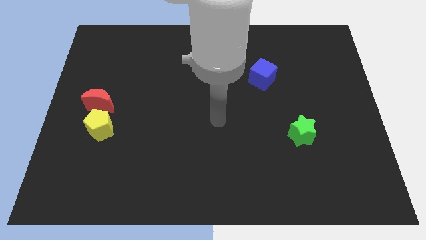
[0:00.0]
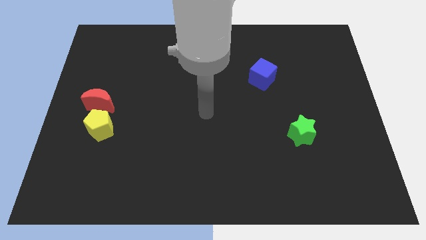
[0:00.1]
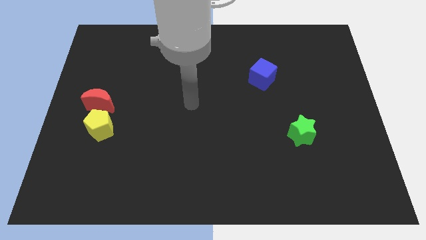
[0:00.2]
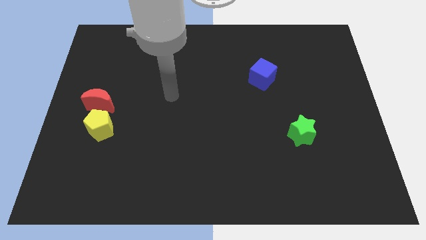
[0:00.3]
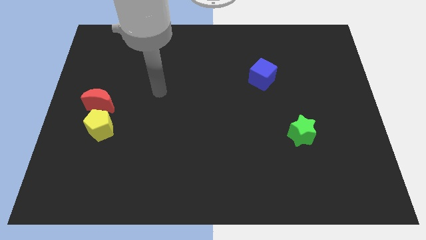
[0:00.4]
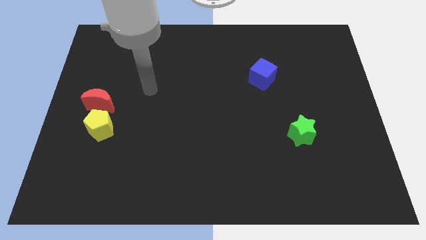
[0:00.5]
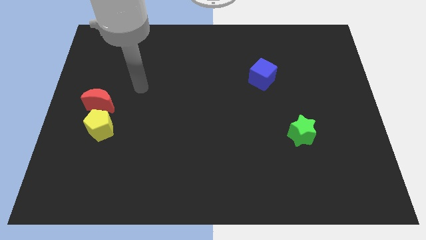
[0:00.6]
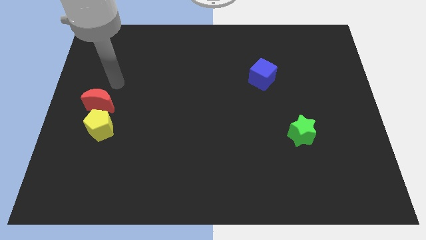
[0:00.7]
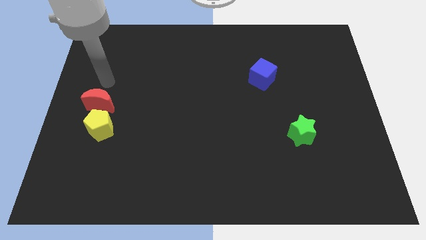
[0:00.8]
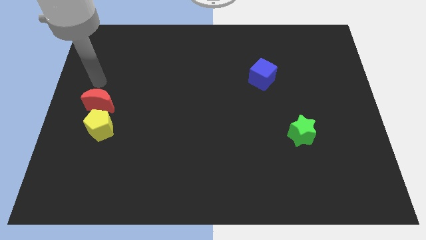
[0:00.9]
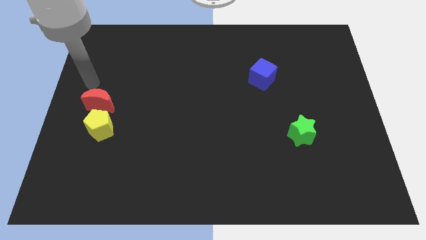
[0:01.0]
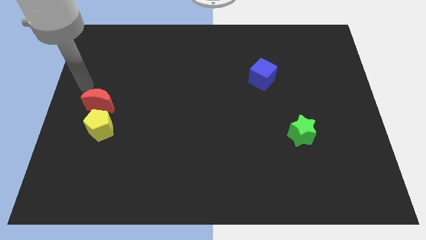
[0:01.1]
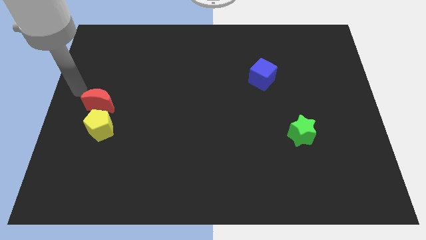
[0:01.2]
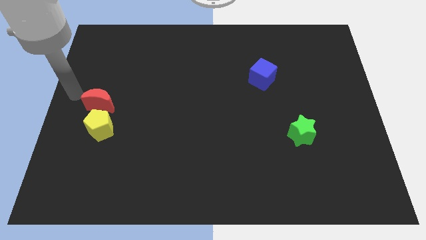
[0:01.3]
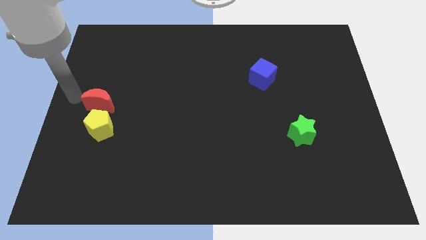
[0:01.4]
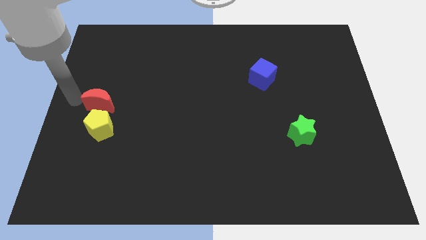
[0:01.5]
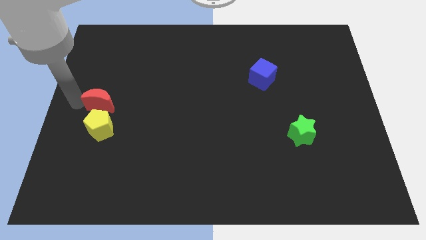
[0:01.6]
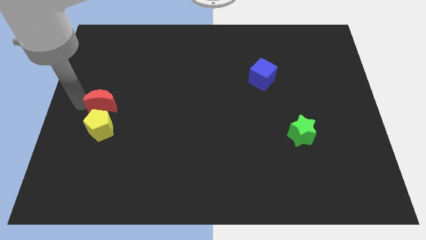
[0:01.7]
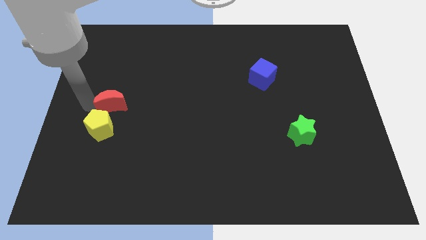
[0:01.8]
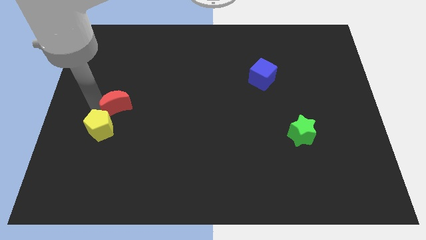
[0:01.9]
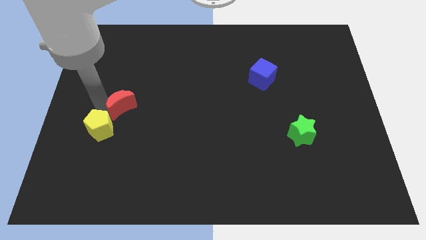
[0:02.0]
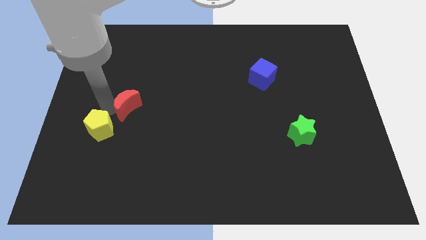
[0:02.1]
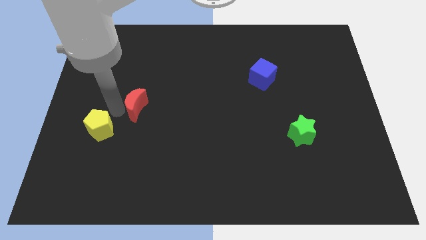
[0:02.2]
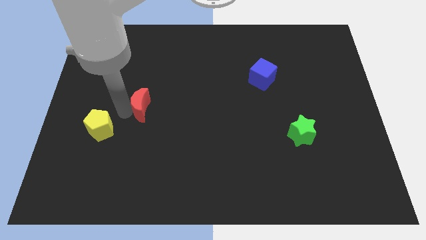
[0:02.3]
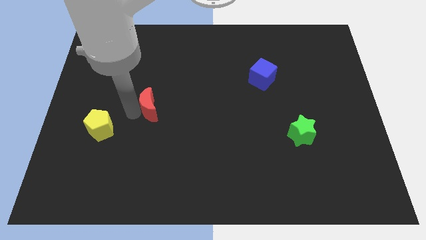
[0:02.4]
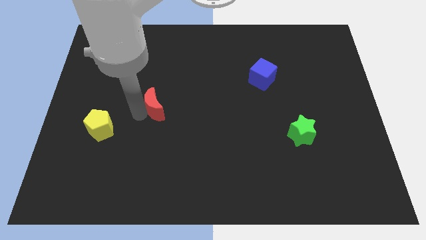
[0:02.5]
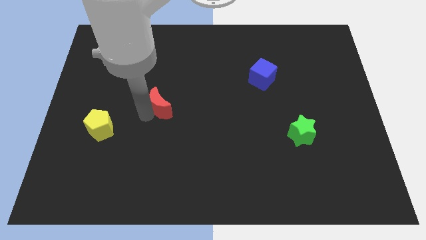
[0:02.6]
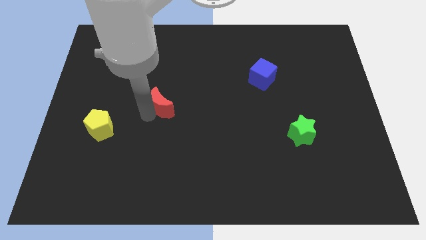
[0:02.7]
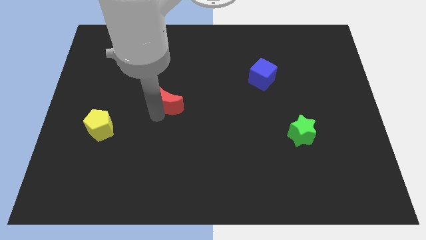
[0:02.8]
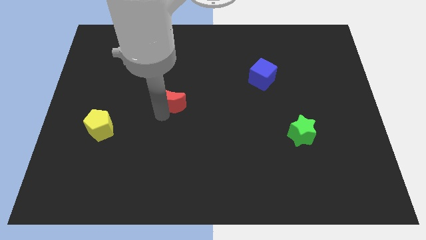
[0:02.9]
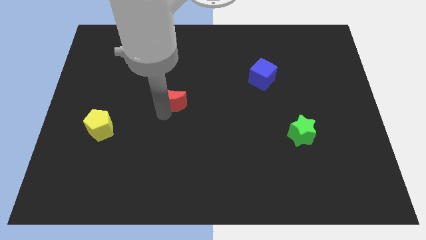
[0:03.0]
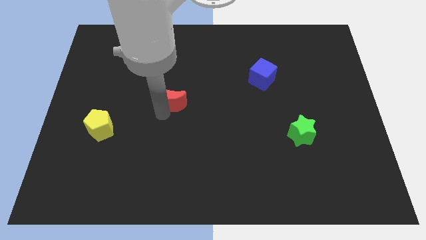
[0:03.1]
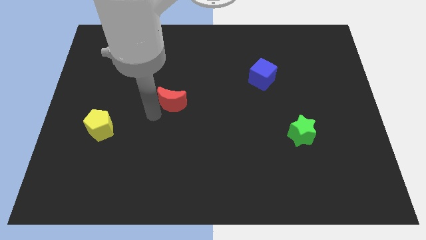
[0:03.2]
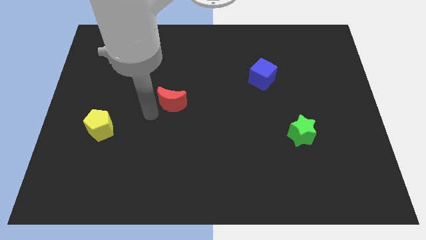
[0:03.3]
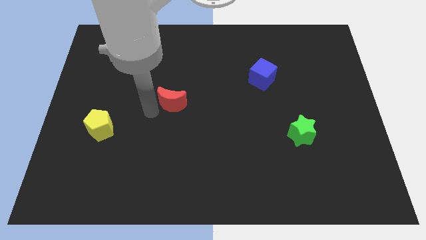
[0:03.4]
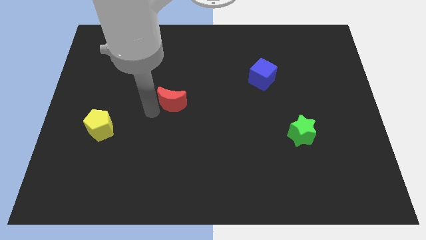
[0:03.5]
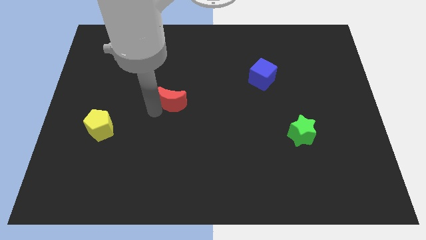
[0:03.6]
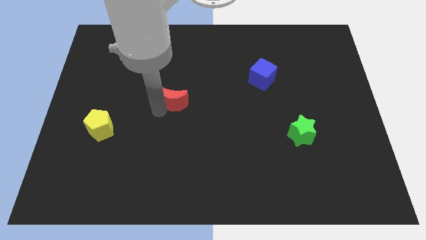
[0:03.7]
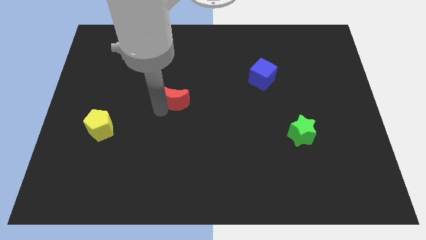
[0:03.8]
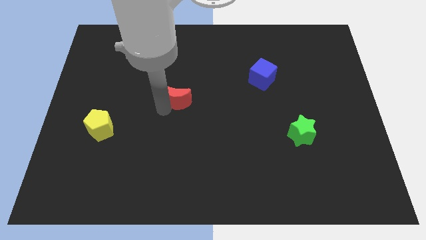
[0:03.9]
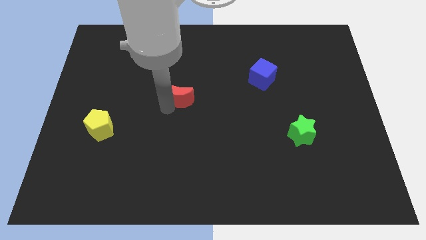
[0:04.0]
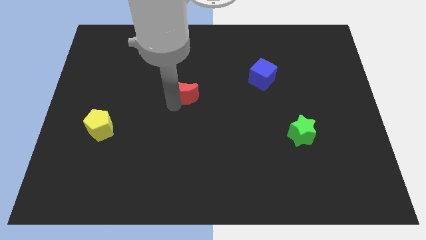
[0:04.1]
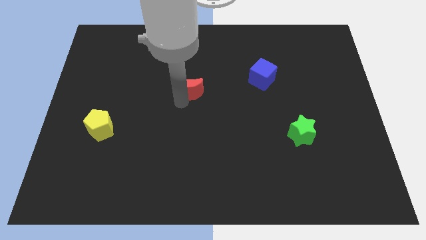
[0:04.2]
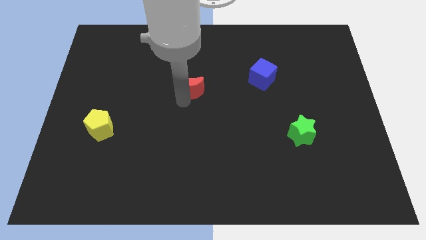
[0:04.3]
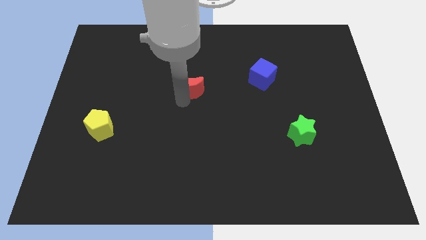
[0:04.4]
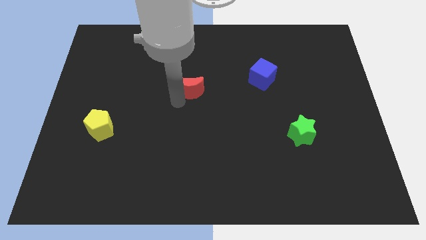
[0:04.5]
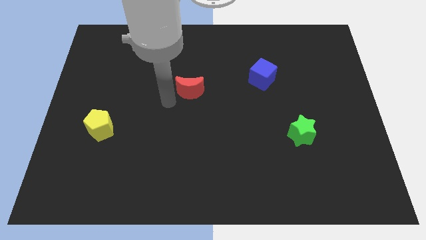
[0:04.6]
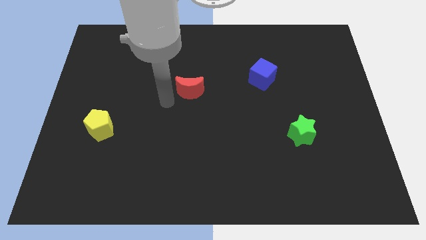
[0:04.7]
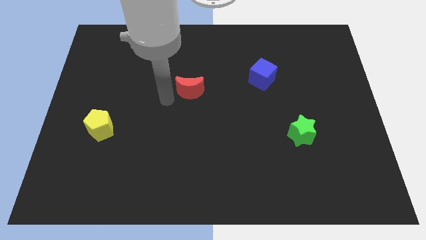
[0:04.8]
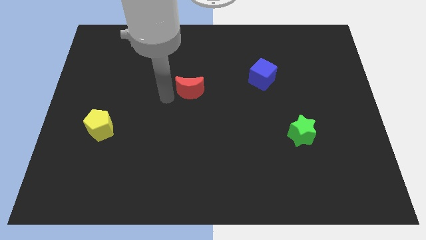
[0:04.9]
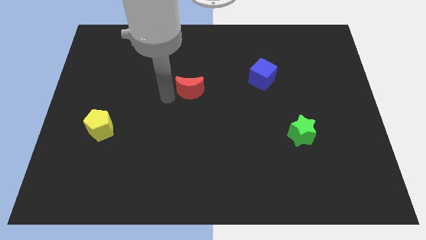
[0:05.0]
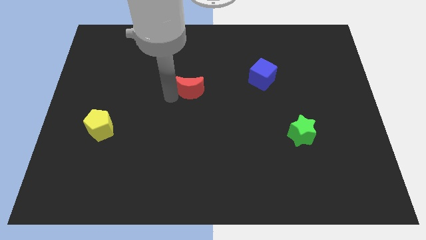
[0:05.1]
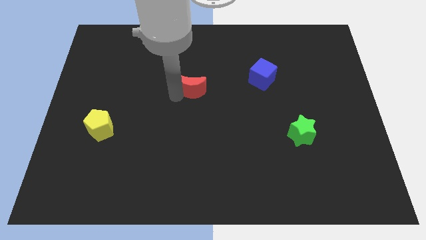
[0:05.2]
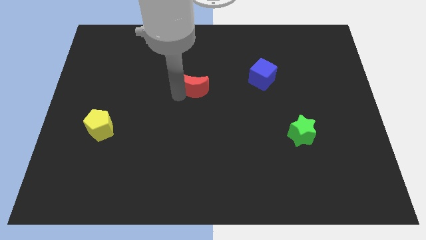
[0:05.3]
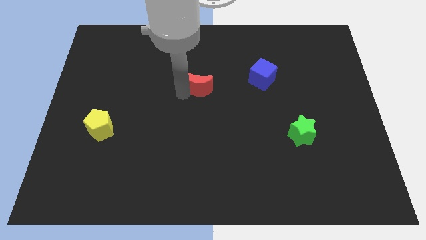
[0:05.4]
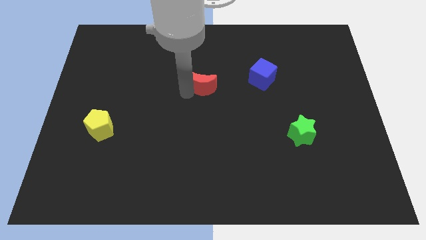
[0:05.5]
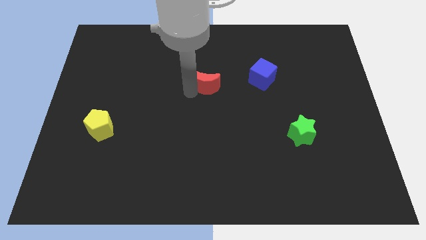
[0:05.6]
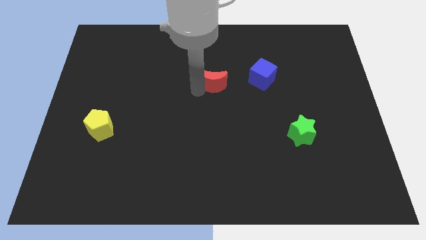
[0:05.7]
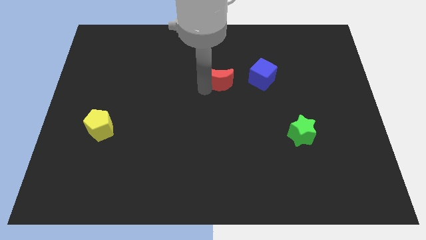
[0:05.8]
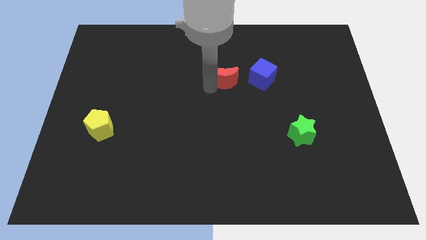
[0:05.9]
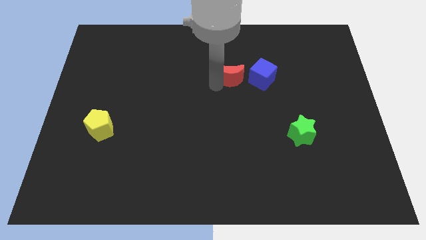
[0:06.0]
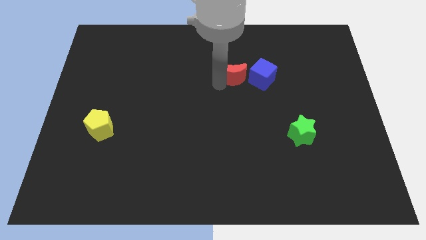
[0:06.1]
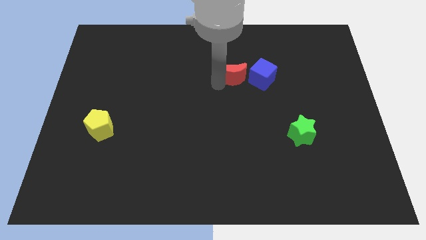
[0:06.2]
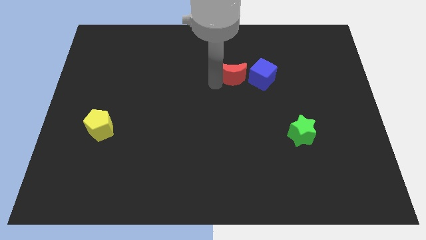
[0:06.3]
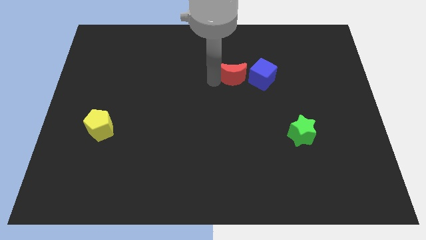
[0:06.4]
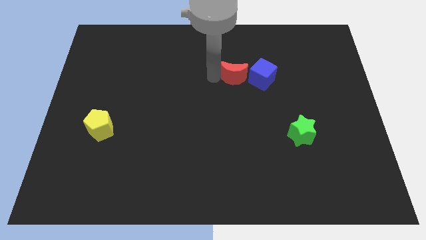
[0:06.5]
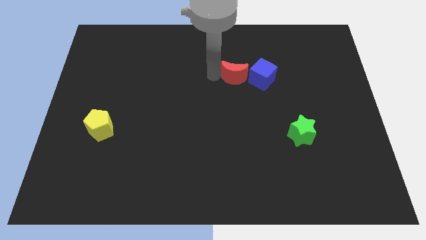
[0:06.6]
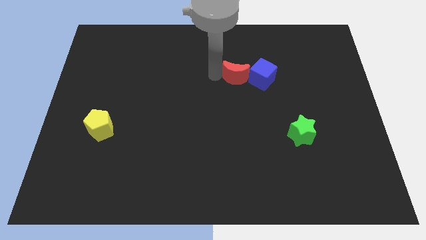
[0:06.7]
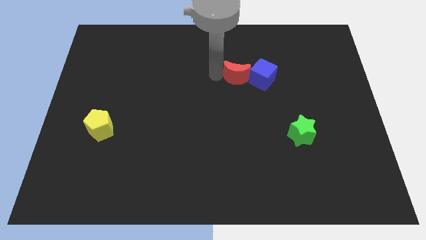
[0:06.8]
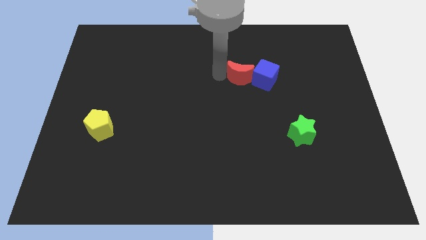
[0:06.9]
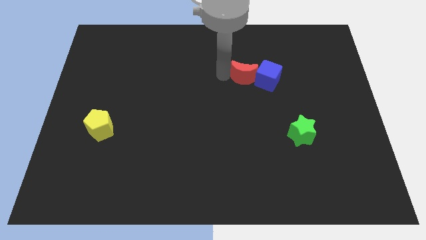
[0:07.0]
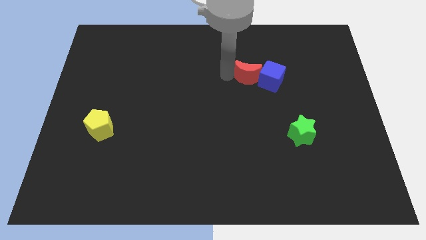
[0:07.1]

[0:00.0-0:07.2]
put the moon to the blue block

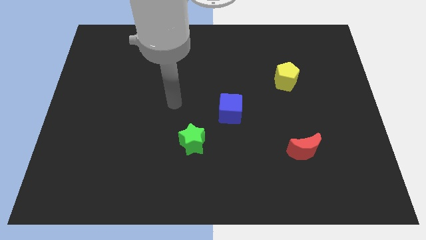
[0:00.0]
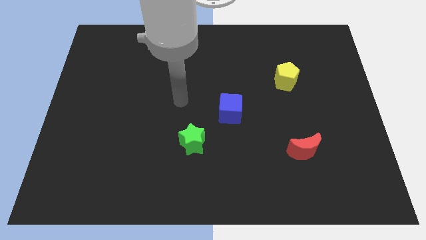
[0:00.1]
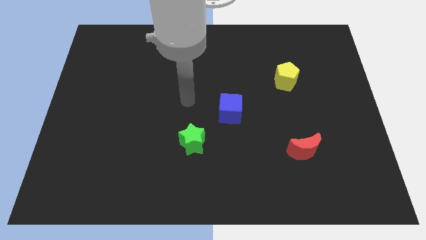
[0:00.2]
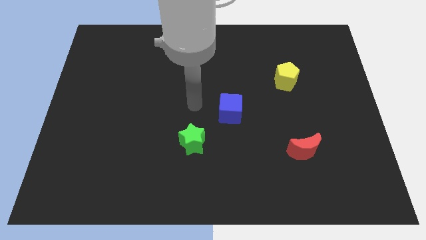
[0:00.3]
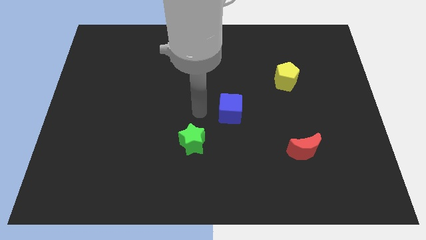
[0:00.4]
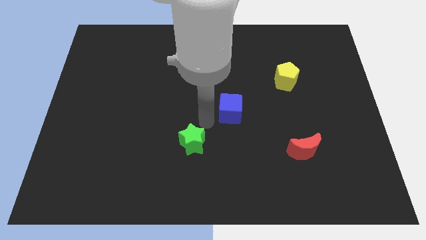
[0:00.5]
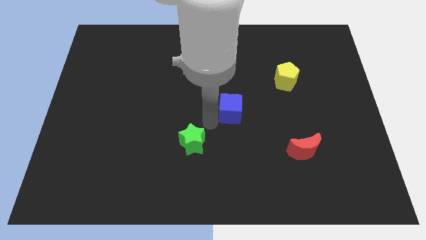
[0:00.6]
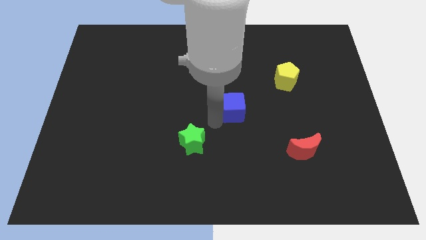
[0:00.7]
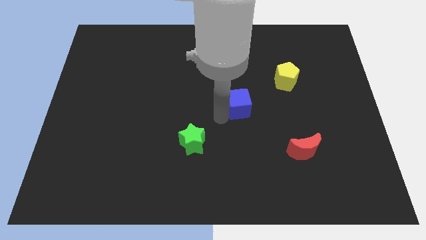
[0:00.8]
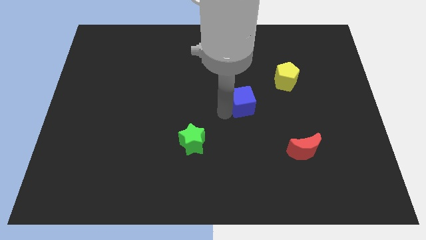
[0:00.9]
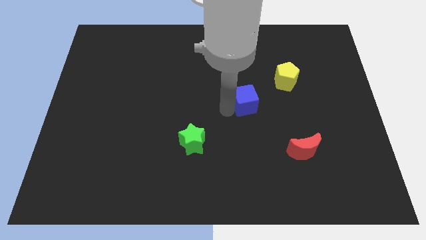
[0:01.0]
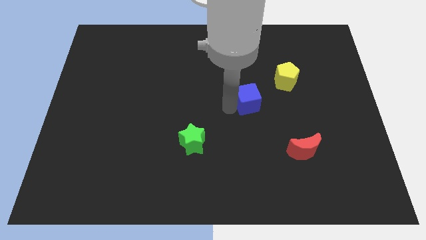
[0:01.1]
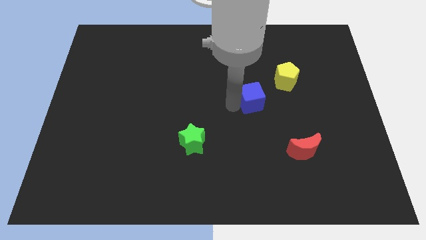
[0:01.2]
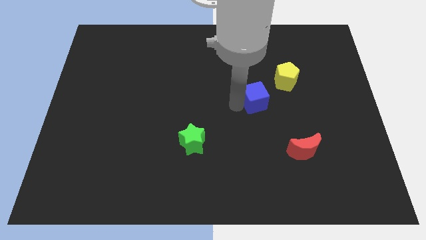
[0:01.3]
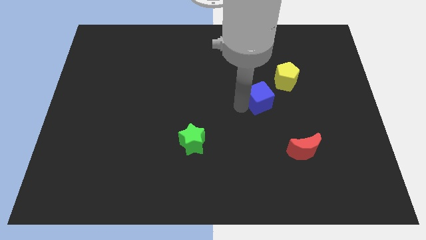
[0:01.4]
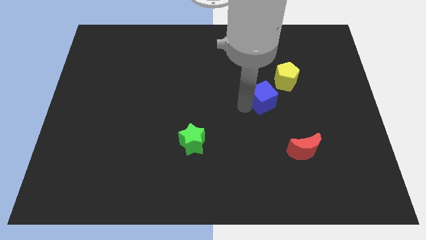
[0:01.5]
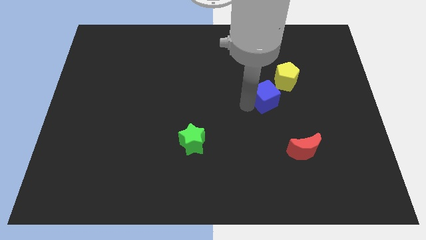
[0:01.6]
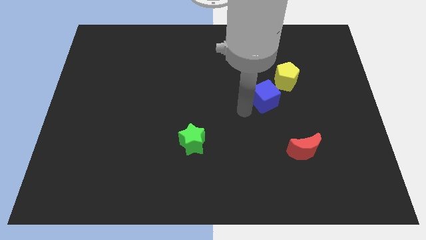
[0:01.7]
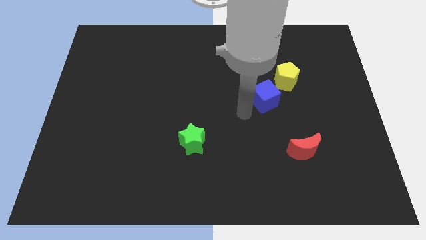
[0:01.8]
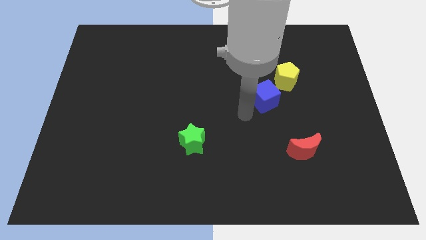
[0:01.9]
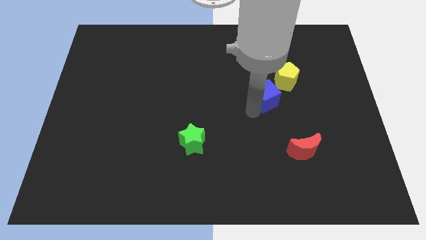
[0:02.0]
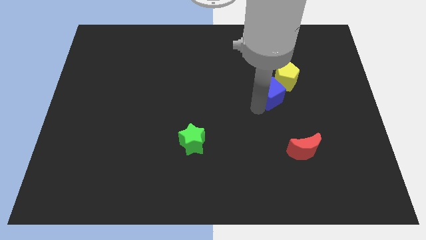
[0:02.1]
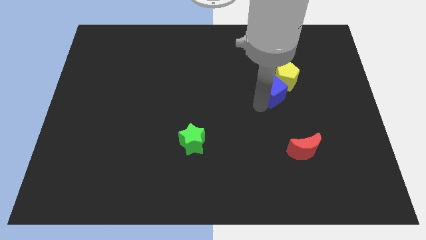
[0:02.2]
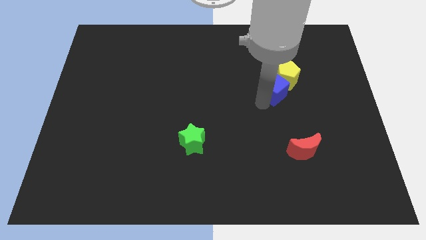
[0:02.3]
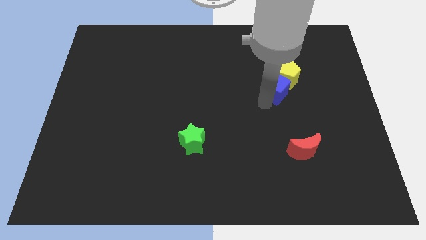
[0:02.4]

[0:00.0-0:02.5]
put the blue cube towards the yellow pentagon
